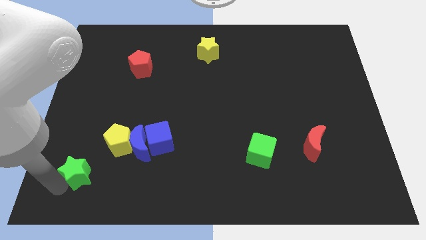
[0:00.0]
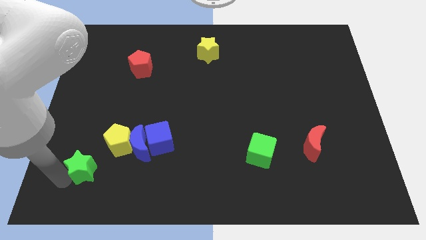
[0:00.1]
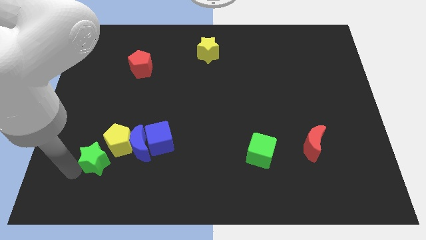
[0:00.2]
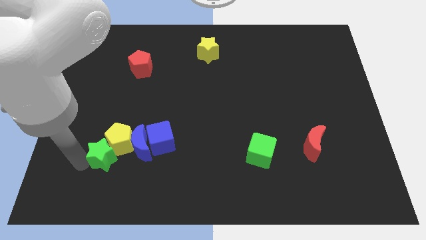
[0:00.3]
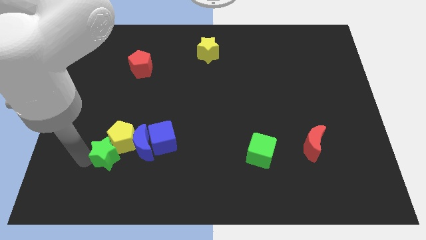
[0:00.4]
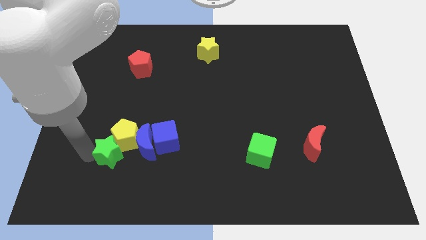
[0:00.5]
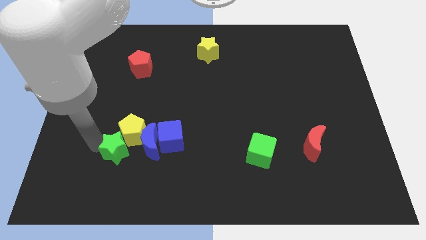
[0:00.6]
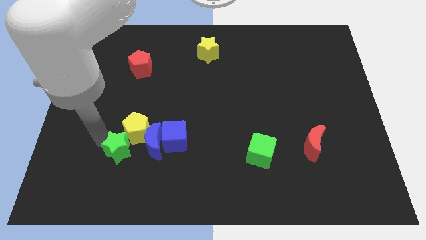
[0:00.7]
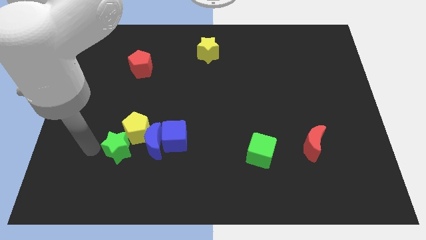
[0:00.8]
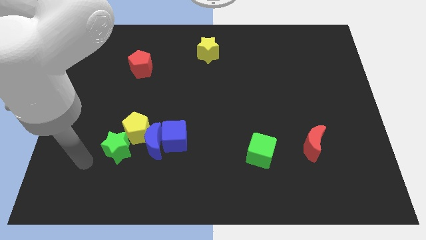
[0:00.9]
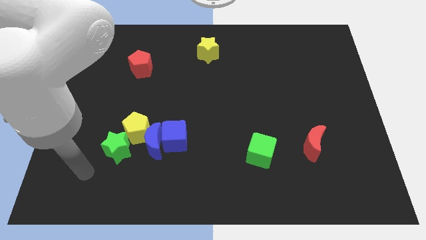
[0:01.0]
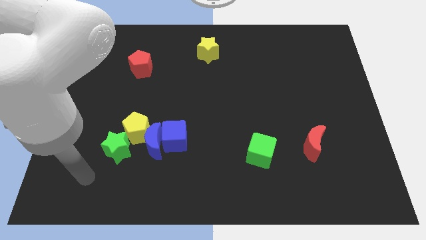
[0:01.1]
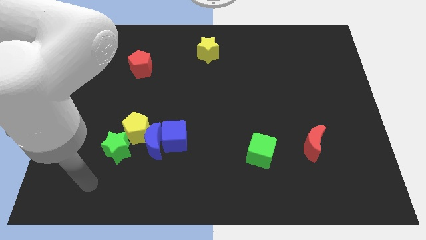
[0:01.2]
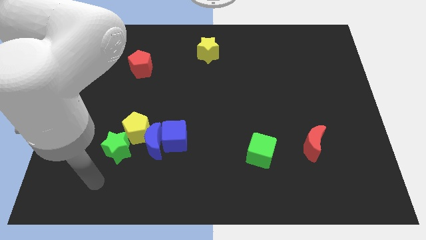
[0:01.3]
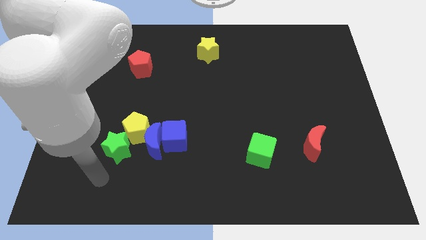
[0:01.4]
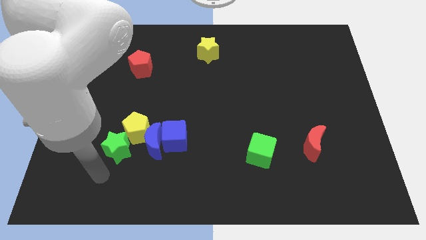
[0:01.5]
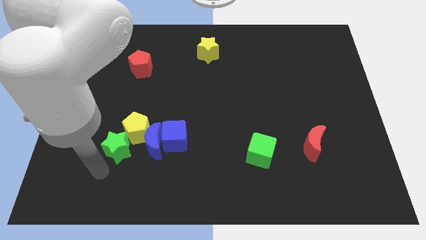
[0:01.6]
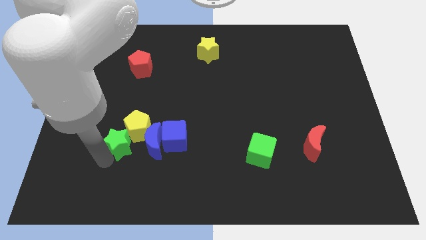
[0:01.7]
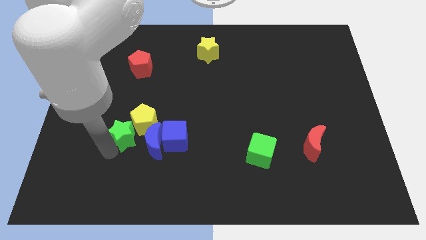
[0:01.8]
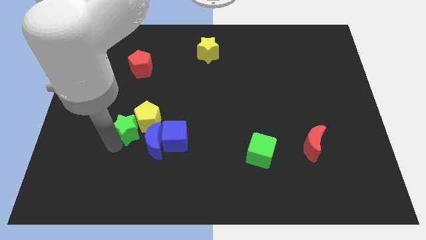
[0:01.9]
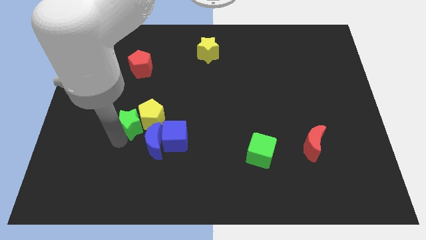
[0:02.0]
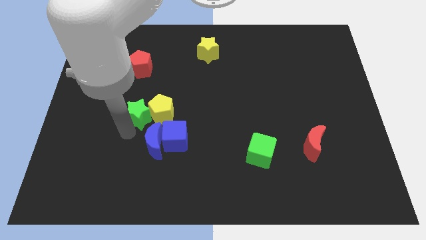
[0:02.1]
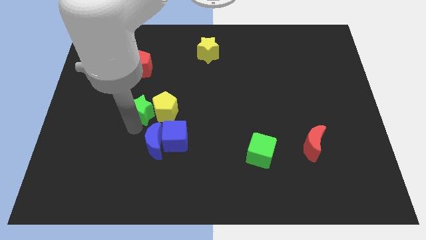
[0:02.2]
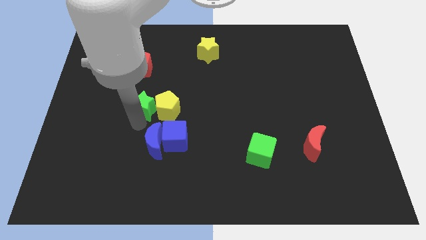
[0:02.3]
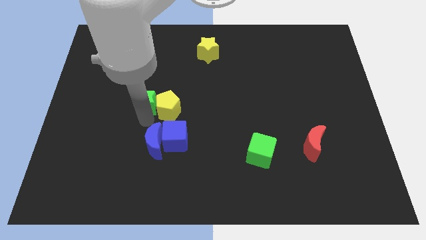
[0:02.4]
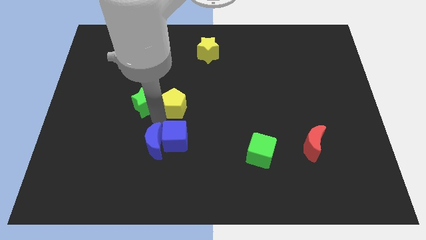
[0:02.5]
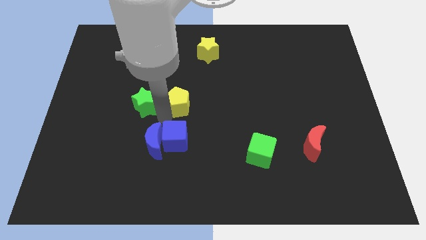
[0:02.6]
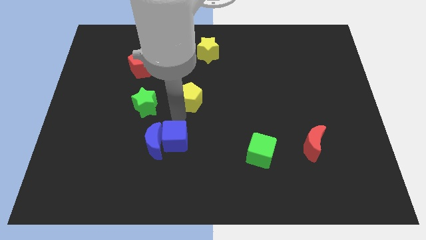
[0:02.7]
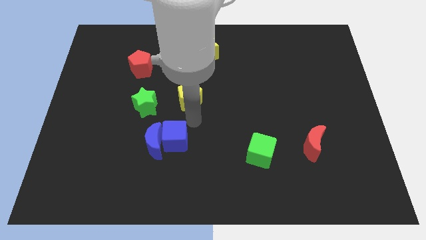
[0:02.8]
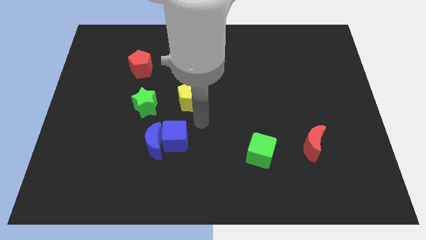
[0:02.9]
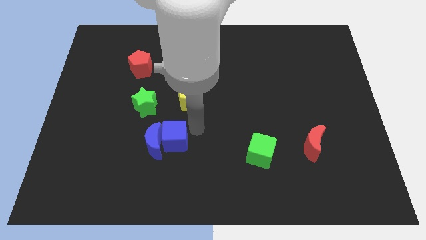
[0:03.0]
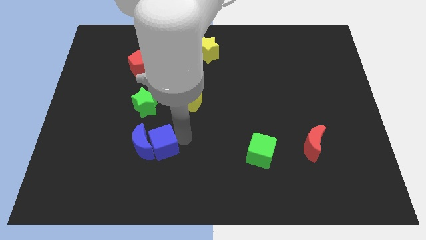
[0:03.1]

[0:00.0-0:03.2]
place the yellow pentagon to the center of the board

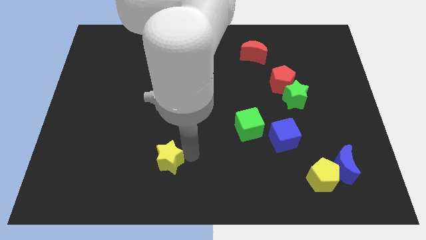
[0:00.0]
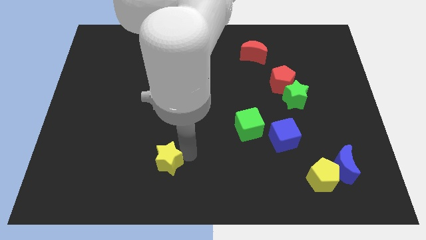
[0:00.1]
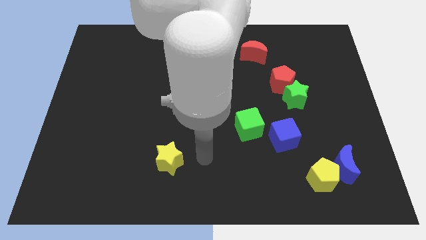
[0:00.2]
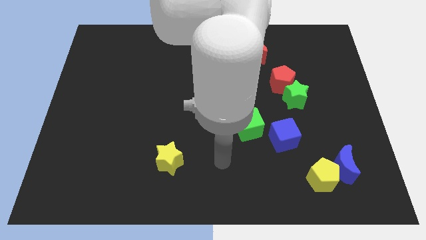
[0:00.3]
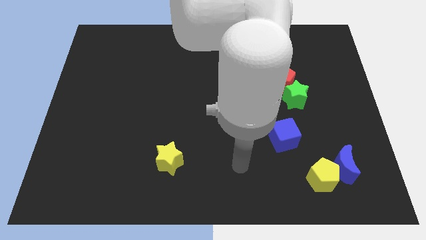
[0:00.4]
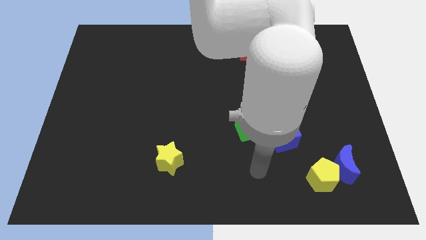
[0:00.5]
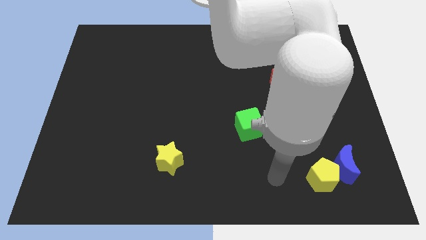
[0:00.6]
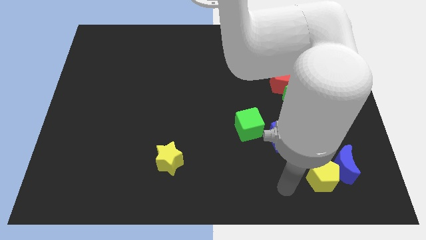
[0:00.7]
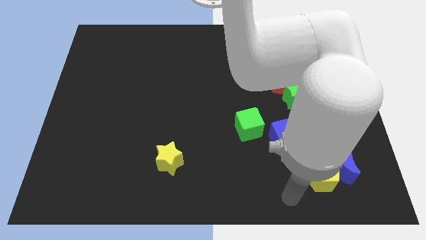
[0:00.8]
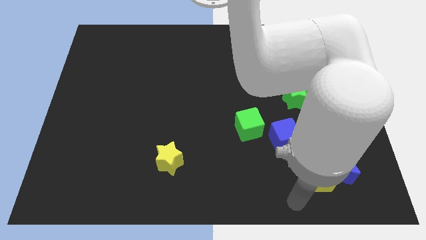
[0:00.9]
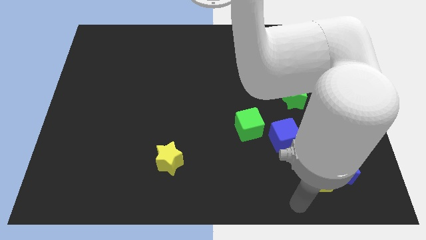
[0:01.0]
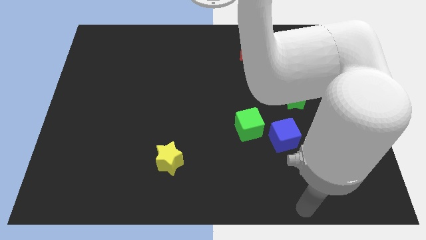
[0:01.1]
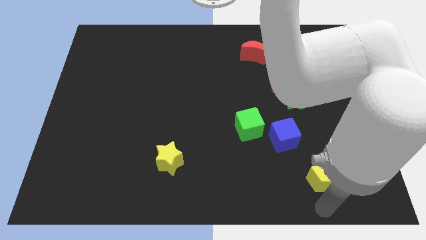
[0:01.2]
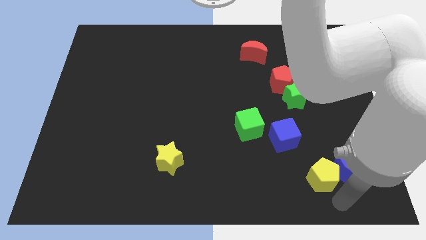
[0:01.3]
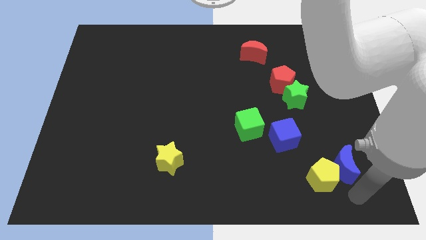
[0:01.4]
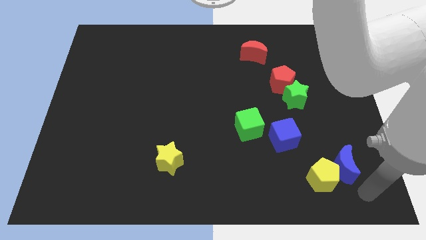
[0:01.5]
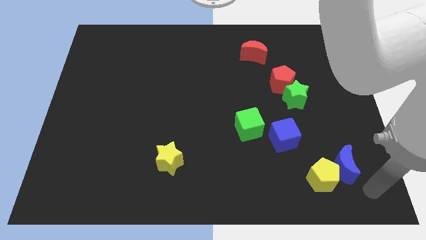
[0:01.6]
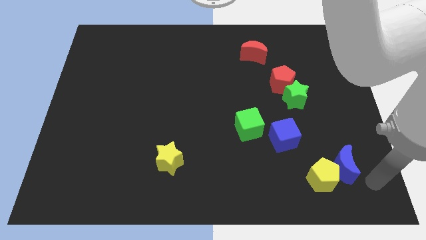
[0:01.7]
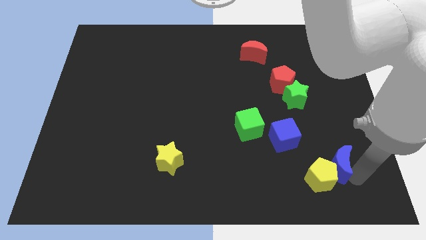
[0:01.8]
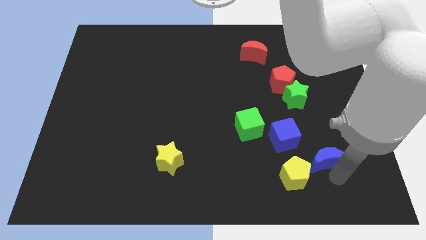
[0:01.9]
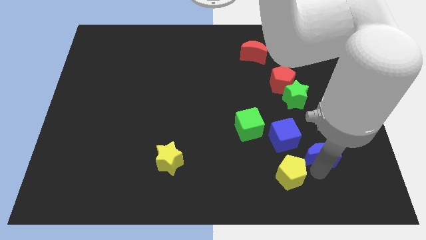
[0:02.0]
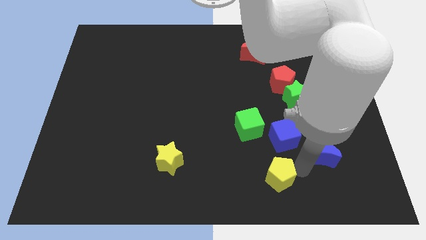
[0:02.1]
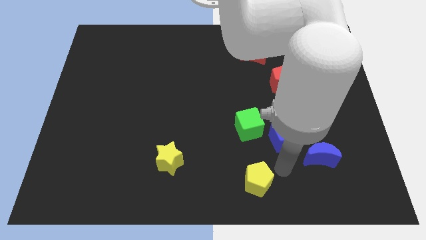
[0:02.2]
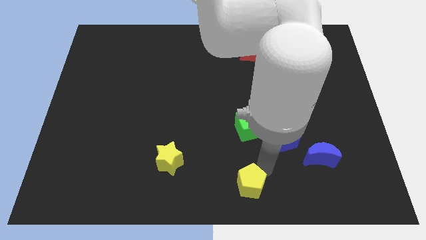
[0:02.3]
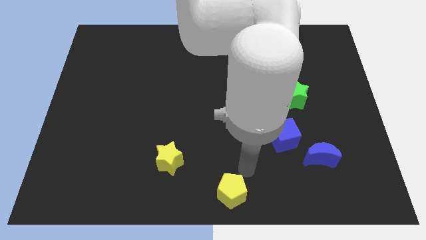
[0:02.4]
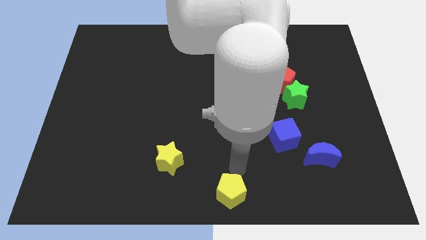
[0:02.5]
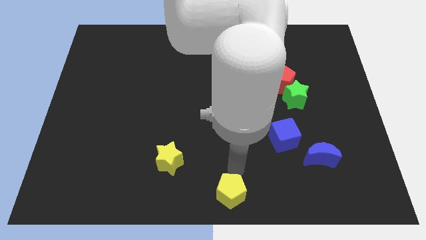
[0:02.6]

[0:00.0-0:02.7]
place the yellow pentagon below the green cube

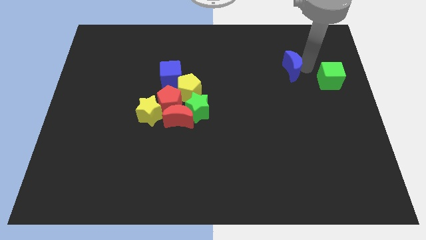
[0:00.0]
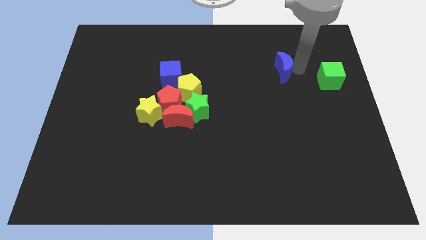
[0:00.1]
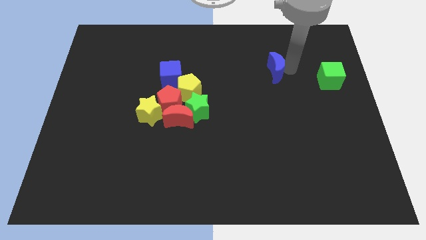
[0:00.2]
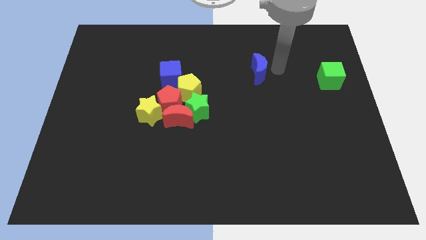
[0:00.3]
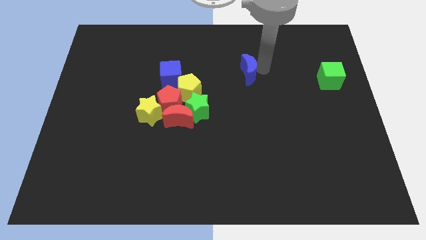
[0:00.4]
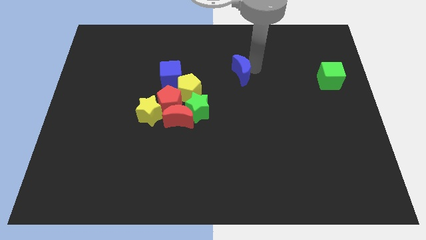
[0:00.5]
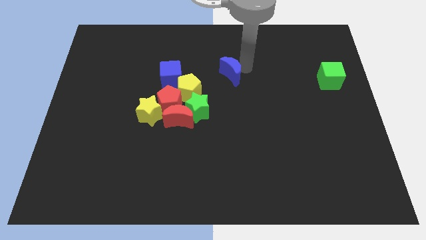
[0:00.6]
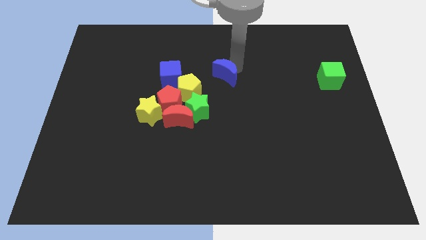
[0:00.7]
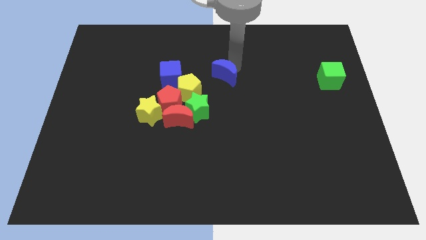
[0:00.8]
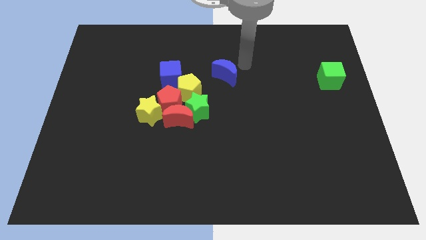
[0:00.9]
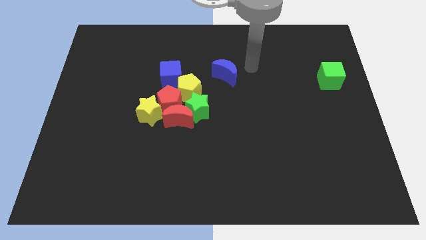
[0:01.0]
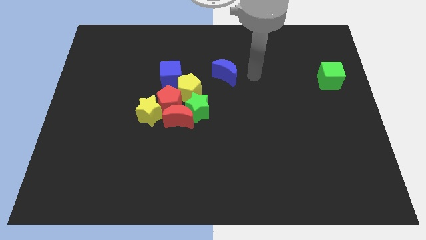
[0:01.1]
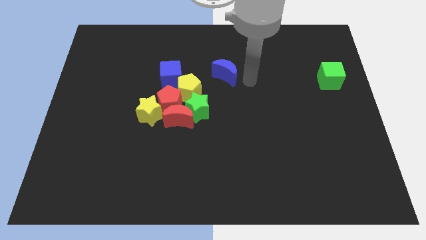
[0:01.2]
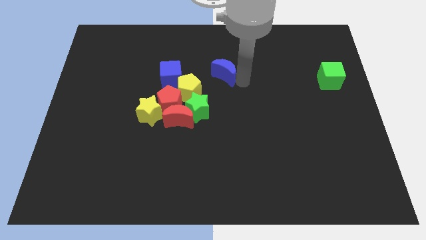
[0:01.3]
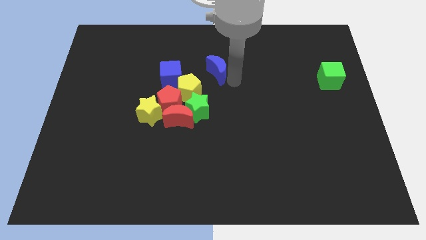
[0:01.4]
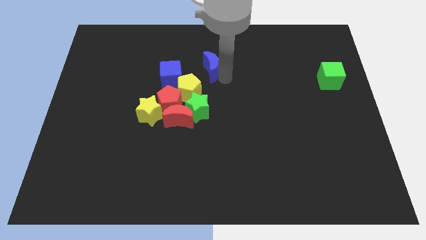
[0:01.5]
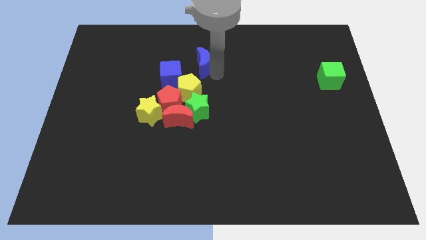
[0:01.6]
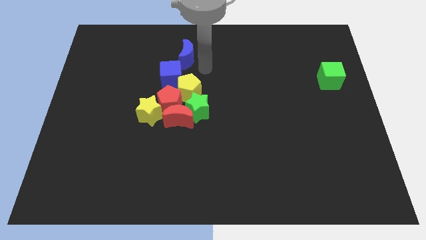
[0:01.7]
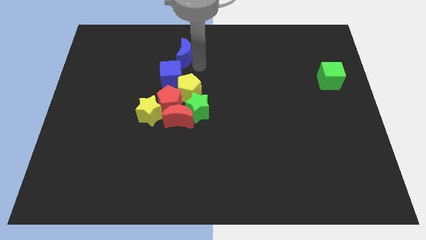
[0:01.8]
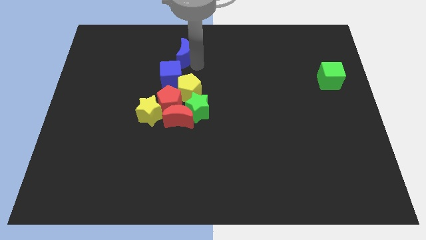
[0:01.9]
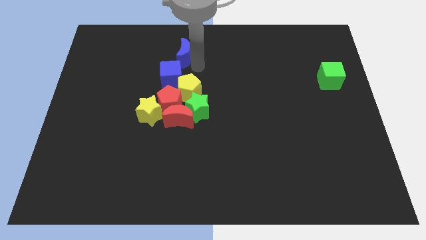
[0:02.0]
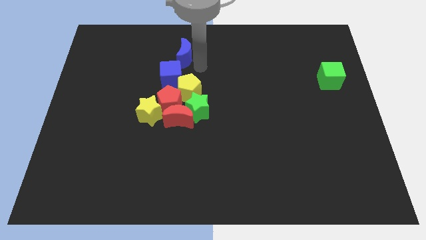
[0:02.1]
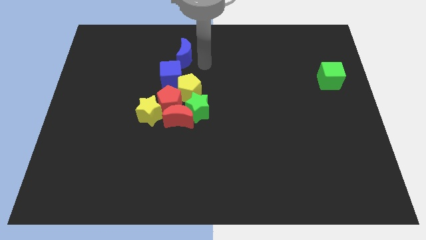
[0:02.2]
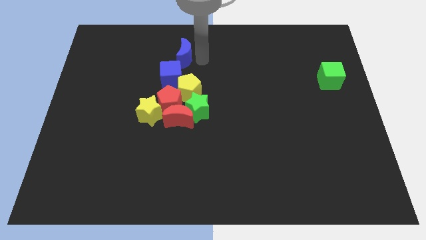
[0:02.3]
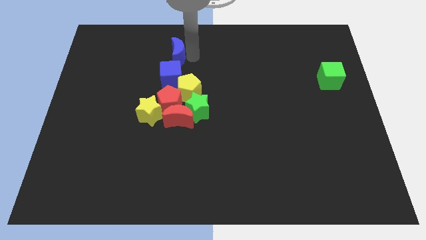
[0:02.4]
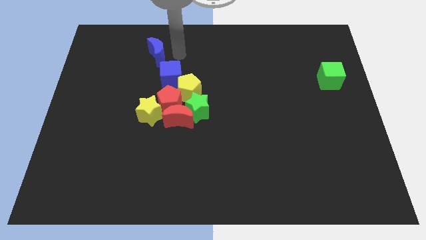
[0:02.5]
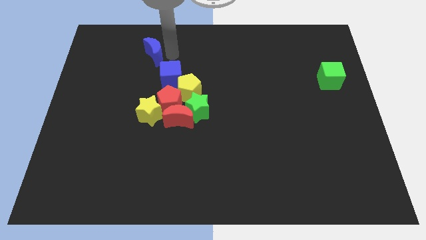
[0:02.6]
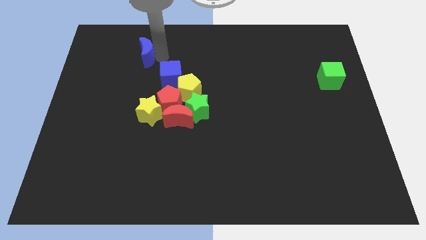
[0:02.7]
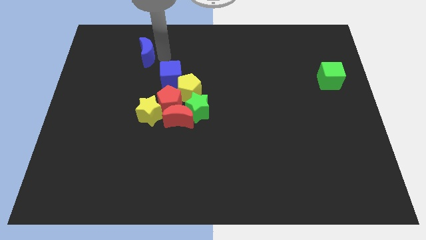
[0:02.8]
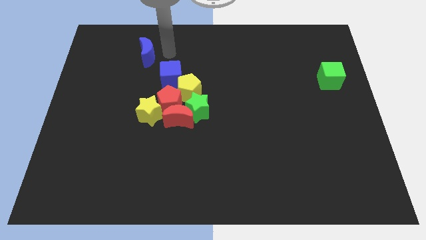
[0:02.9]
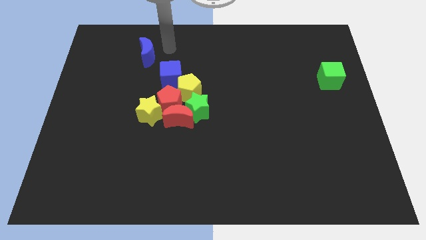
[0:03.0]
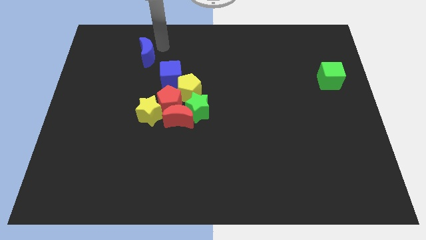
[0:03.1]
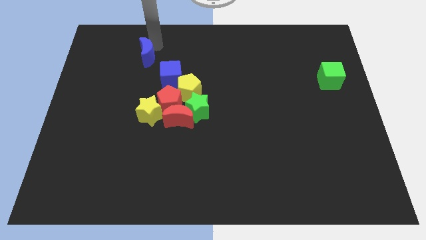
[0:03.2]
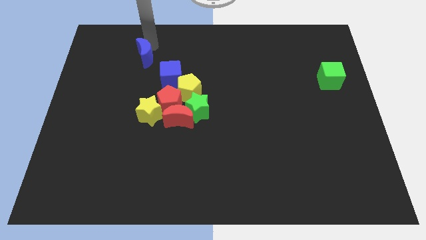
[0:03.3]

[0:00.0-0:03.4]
drag the blue moon to the left
